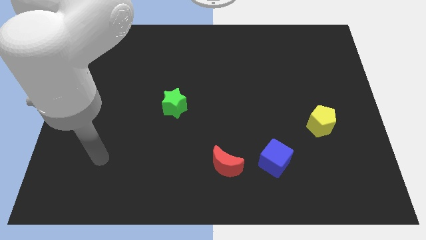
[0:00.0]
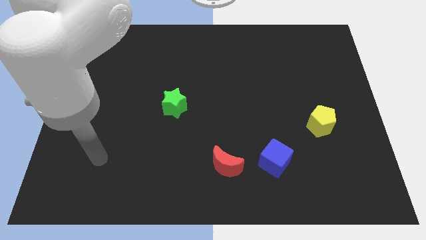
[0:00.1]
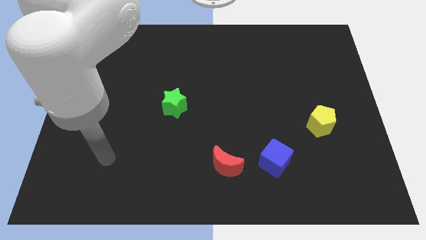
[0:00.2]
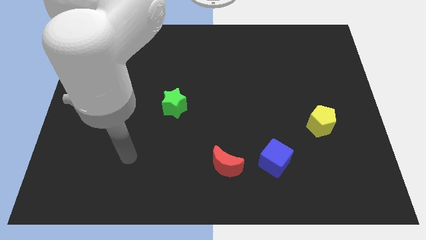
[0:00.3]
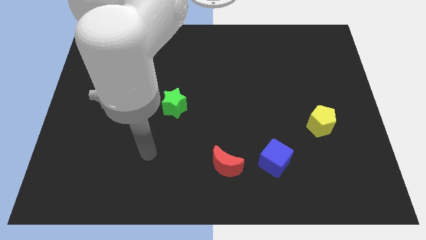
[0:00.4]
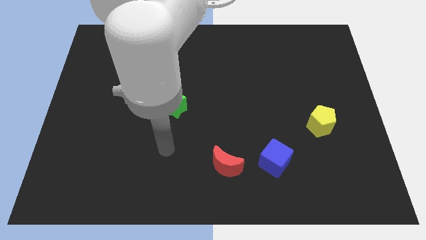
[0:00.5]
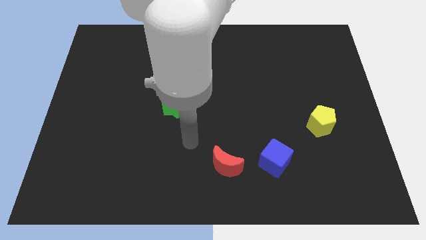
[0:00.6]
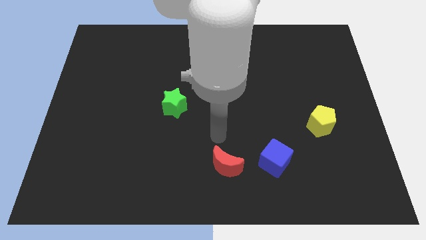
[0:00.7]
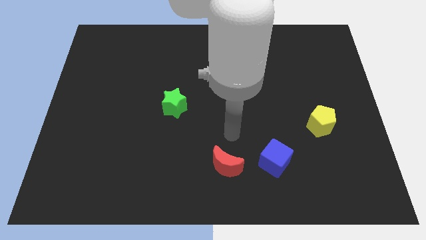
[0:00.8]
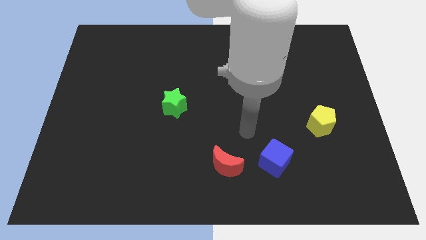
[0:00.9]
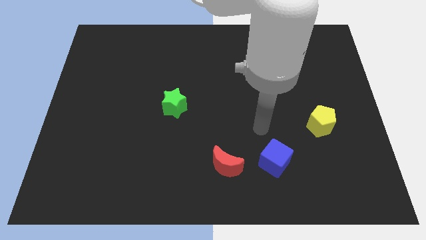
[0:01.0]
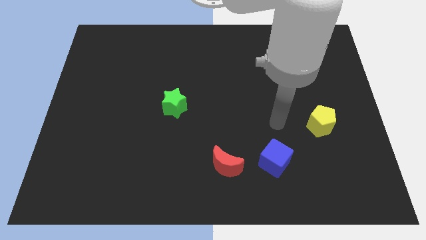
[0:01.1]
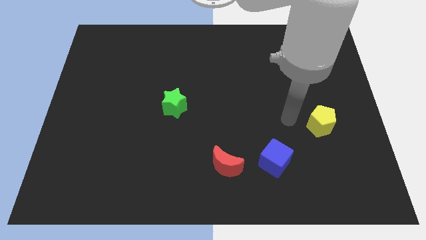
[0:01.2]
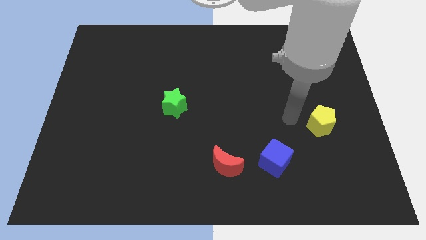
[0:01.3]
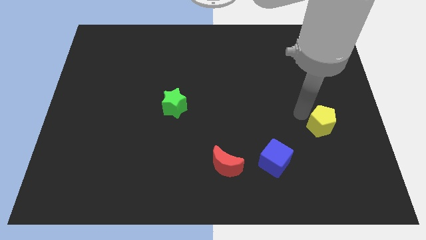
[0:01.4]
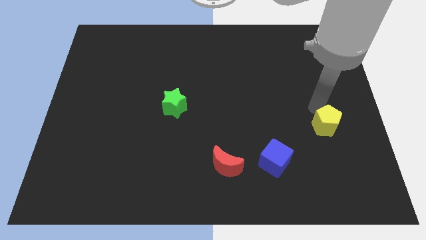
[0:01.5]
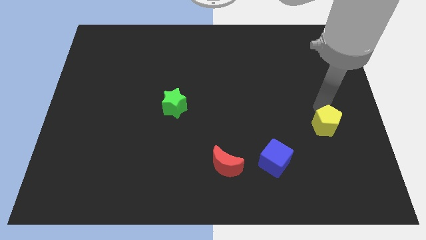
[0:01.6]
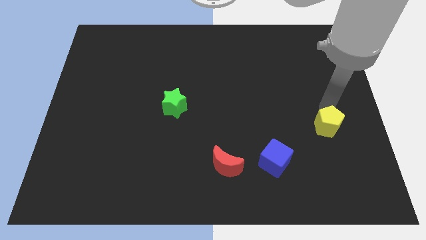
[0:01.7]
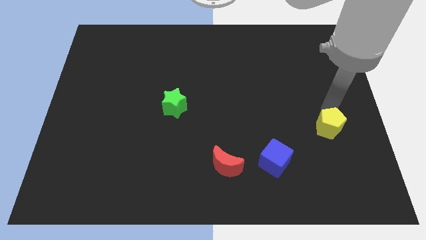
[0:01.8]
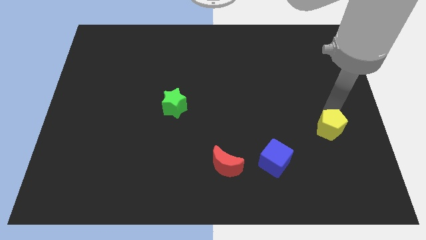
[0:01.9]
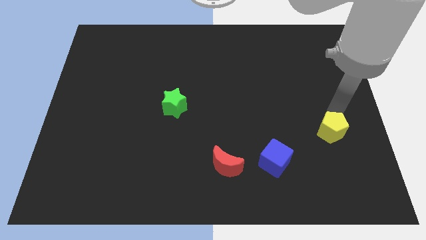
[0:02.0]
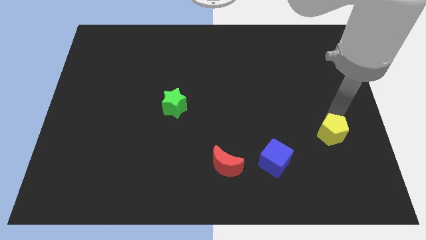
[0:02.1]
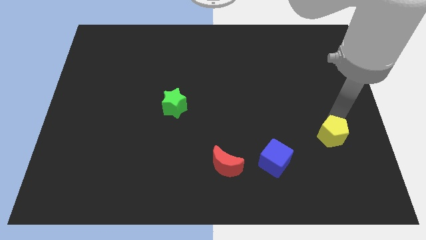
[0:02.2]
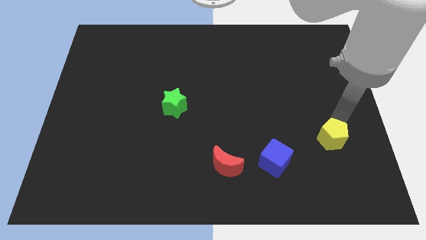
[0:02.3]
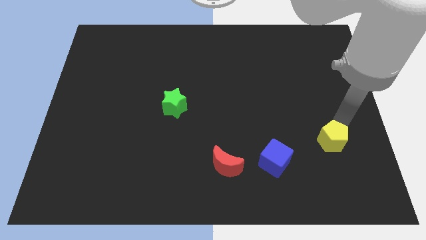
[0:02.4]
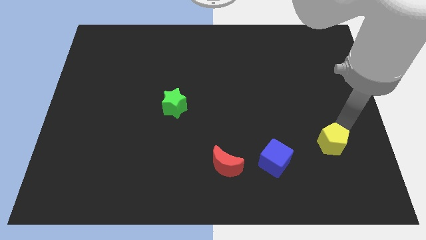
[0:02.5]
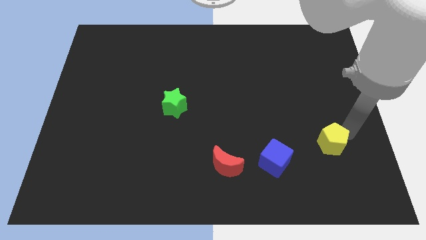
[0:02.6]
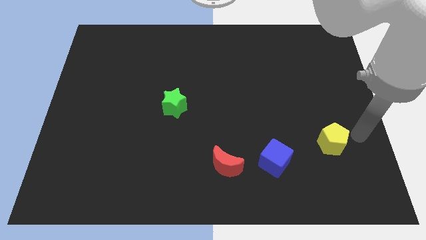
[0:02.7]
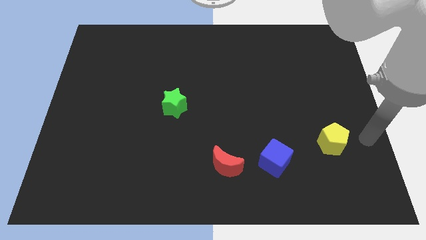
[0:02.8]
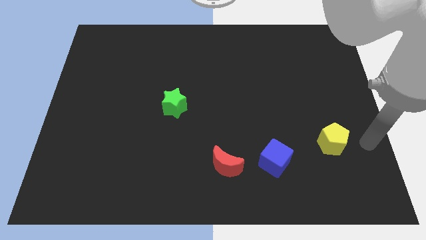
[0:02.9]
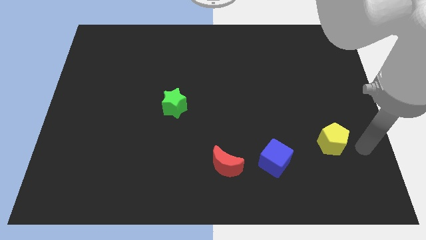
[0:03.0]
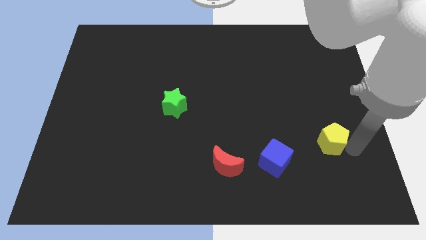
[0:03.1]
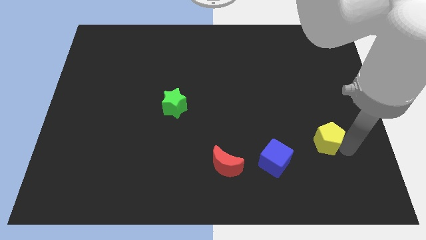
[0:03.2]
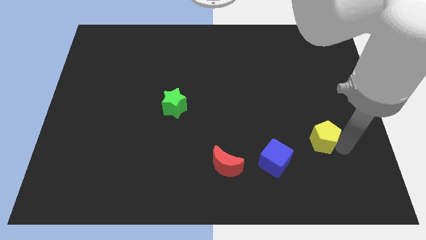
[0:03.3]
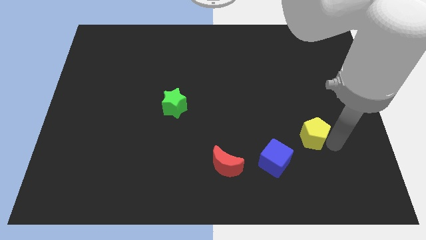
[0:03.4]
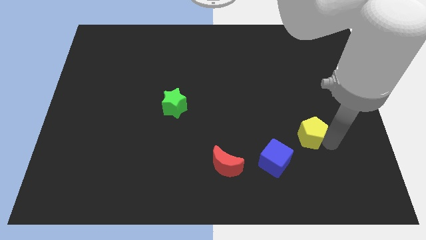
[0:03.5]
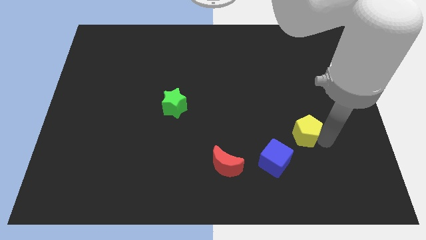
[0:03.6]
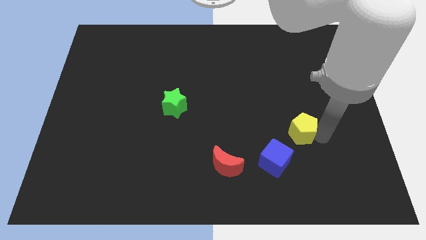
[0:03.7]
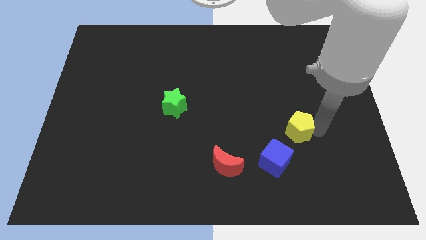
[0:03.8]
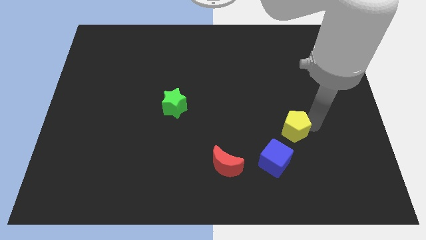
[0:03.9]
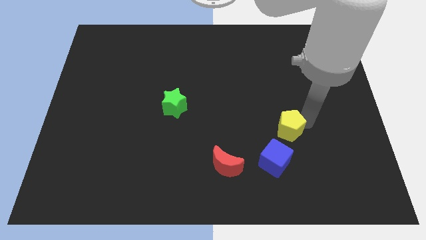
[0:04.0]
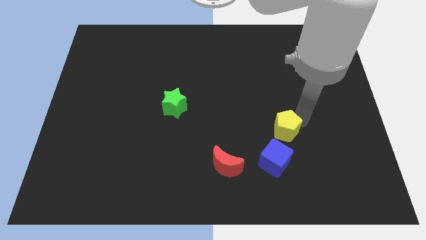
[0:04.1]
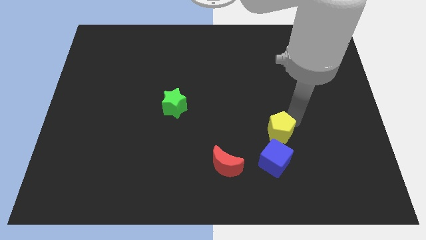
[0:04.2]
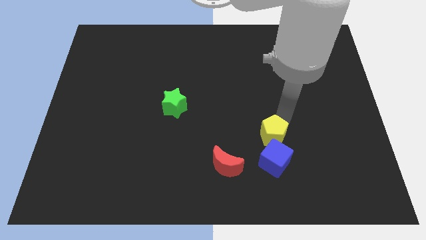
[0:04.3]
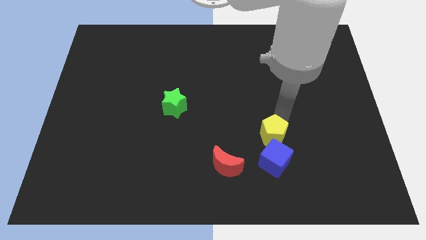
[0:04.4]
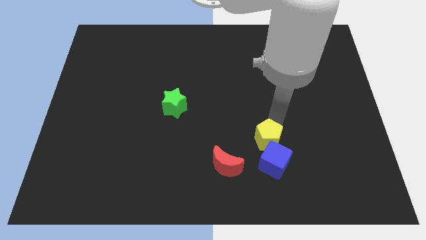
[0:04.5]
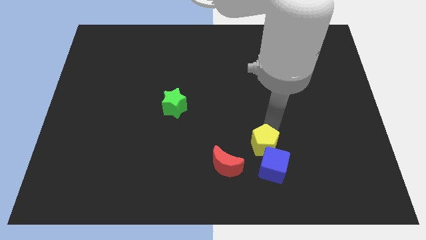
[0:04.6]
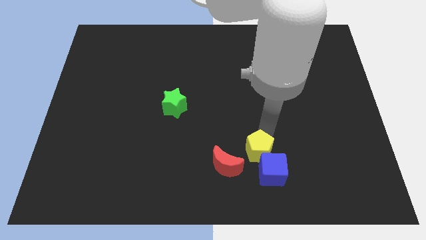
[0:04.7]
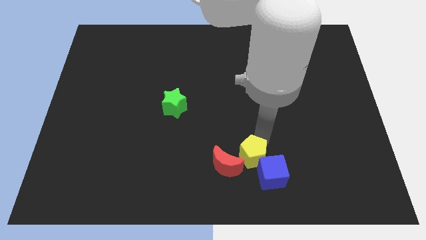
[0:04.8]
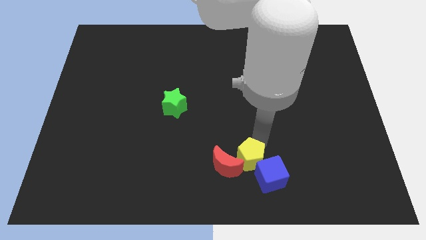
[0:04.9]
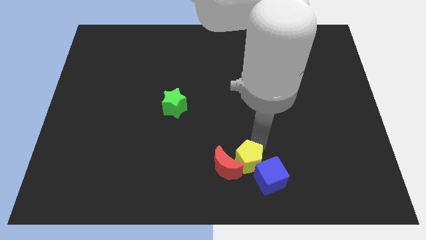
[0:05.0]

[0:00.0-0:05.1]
put the pentagon next to the red moon

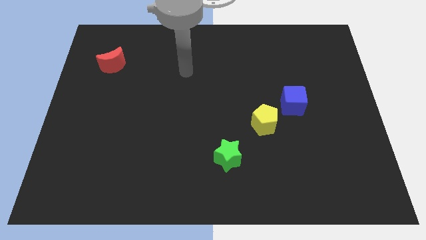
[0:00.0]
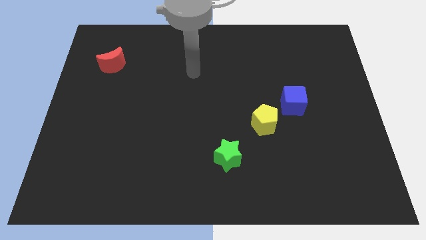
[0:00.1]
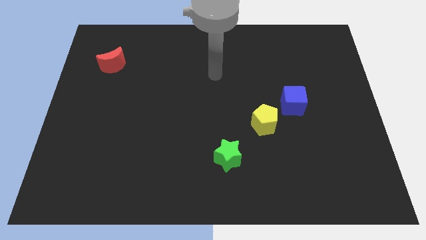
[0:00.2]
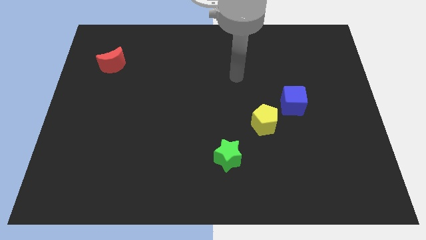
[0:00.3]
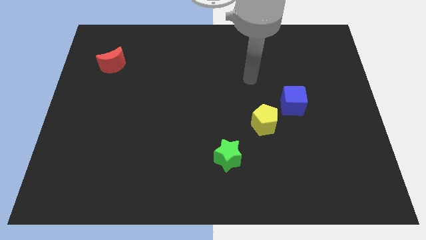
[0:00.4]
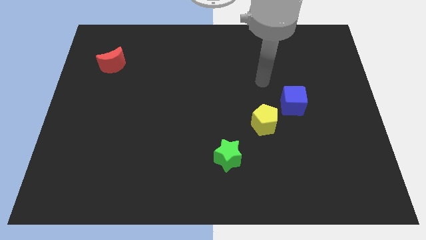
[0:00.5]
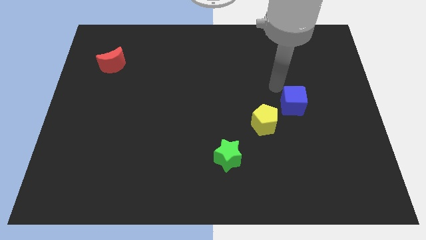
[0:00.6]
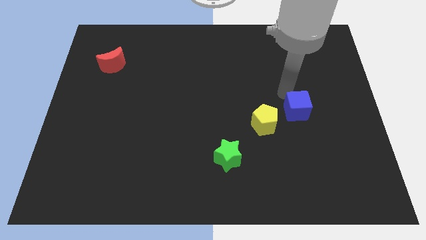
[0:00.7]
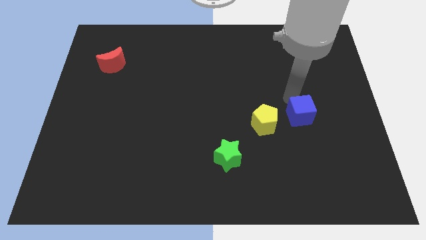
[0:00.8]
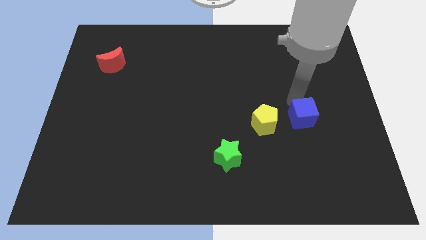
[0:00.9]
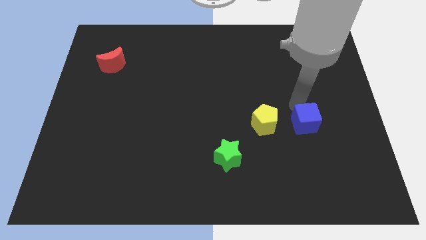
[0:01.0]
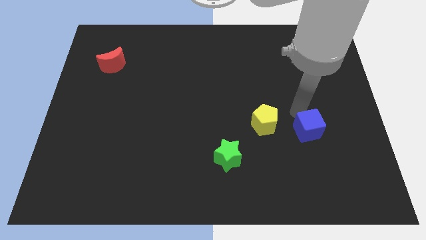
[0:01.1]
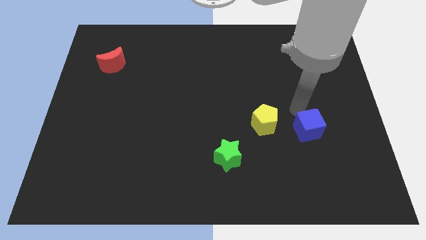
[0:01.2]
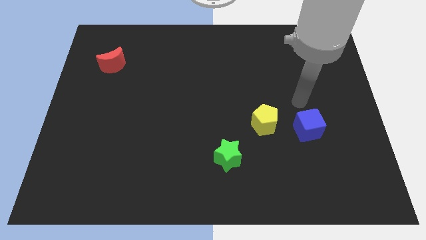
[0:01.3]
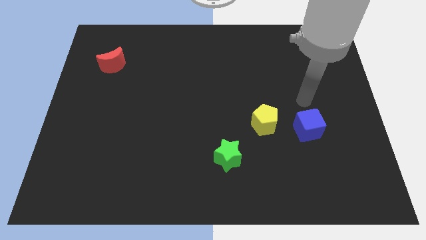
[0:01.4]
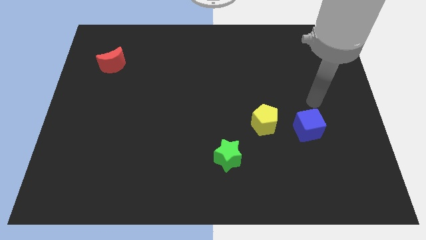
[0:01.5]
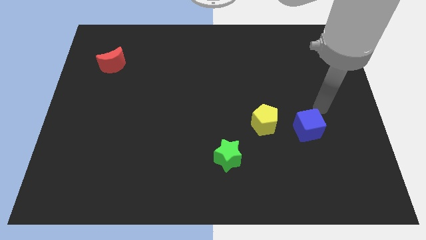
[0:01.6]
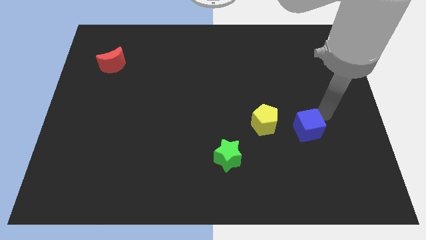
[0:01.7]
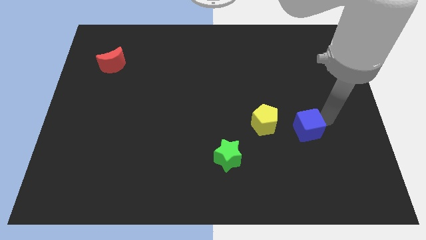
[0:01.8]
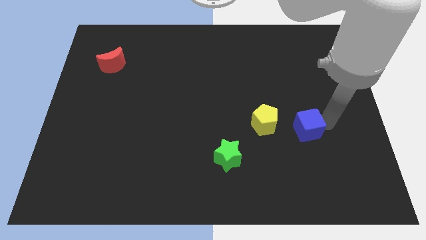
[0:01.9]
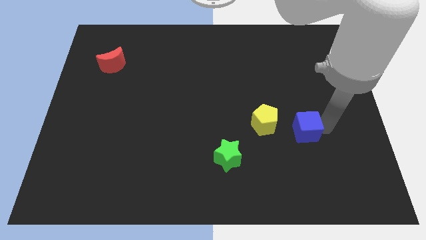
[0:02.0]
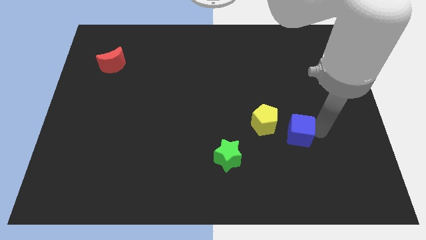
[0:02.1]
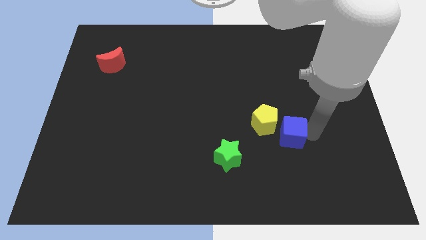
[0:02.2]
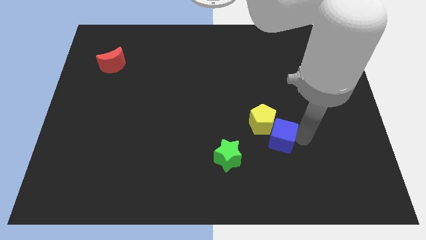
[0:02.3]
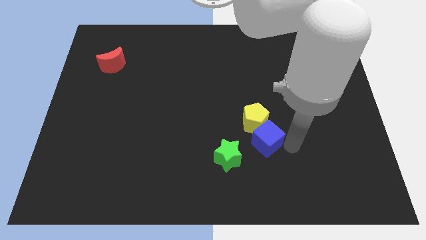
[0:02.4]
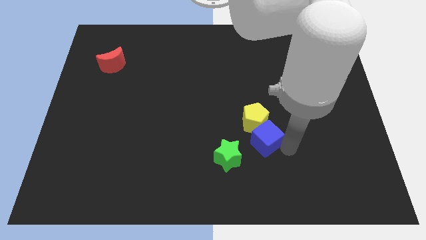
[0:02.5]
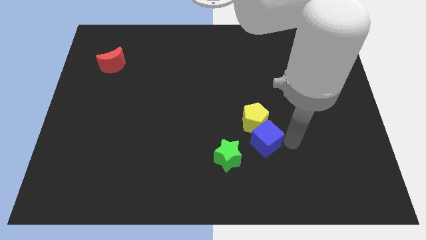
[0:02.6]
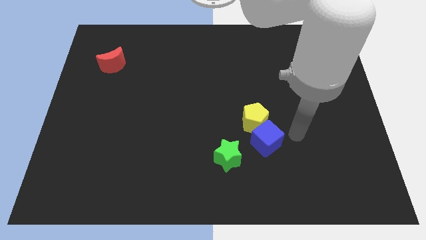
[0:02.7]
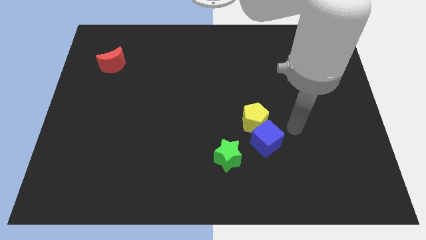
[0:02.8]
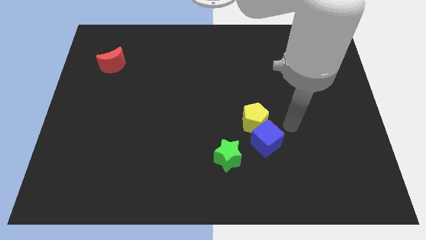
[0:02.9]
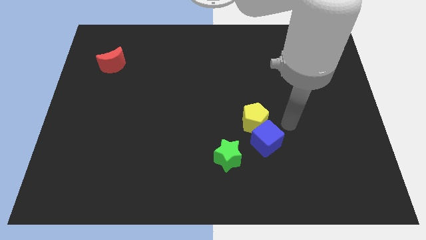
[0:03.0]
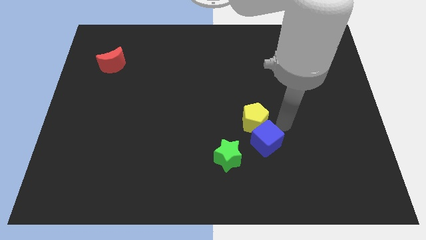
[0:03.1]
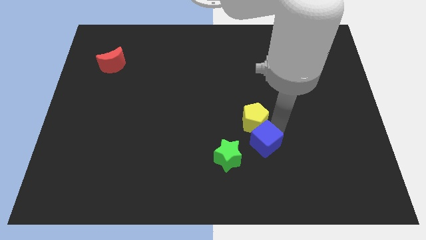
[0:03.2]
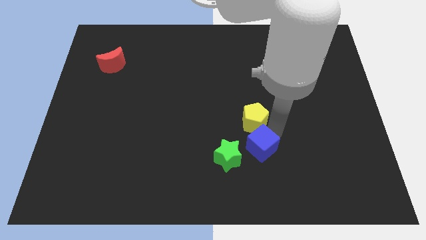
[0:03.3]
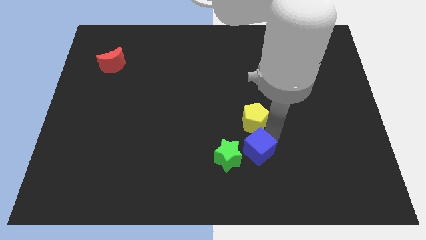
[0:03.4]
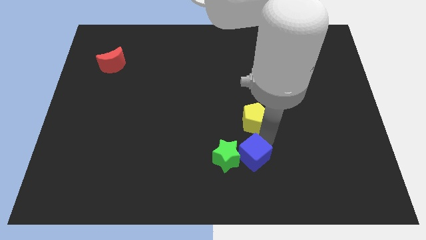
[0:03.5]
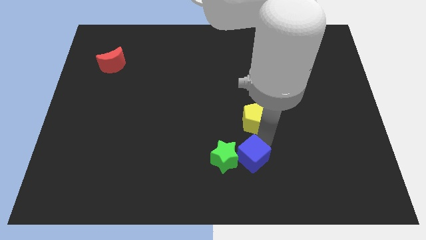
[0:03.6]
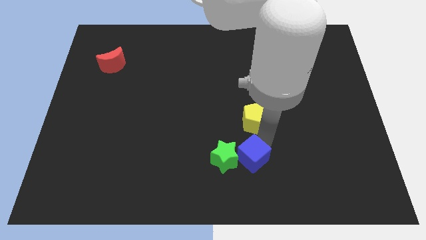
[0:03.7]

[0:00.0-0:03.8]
move the blue block towards the green block
